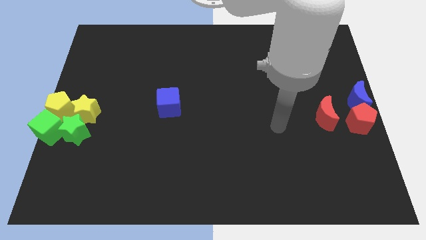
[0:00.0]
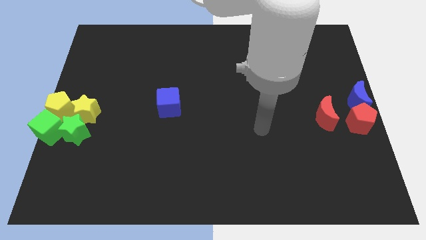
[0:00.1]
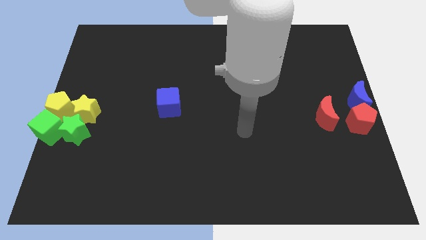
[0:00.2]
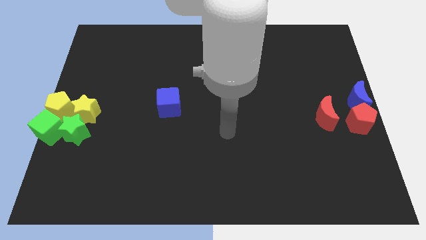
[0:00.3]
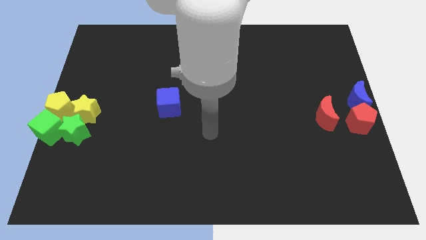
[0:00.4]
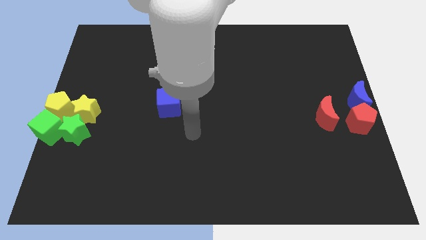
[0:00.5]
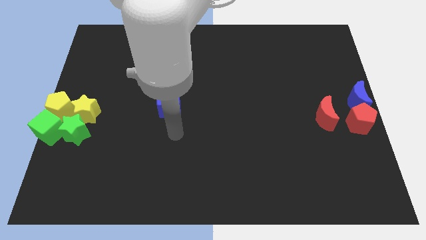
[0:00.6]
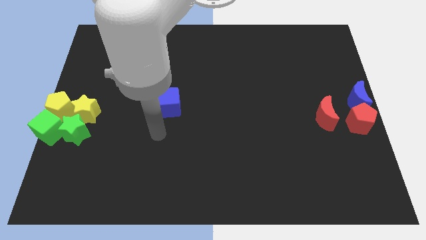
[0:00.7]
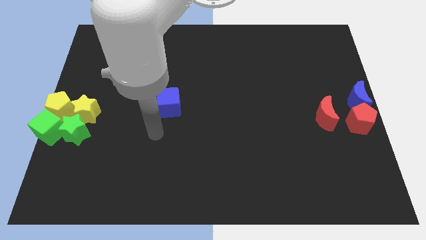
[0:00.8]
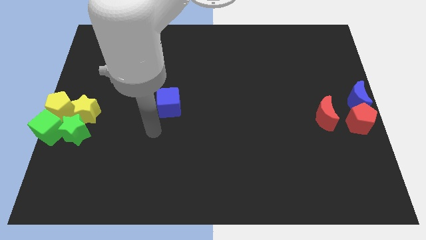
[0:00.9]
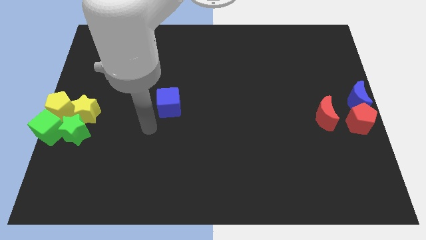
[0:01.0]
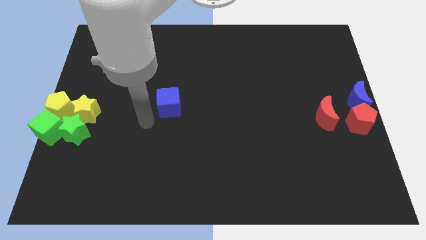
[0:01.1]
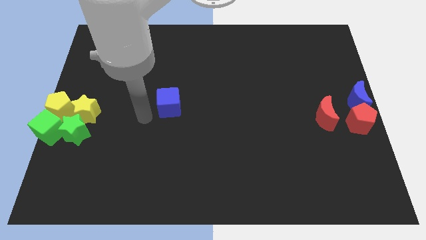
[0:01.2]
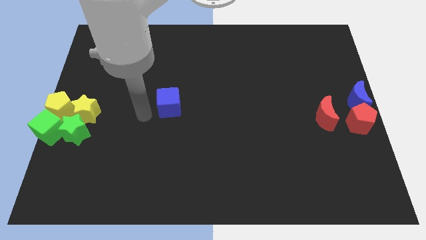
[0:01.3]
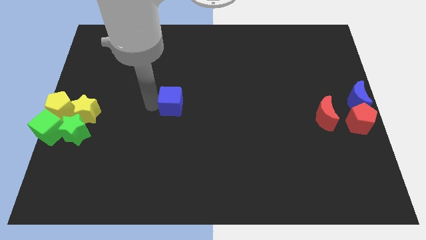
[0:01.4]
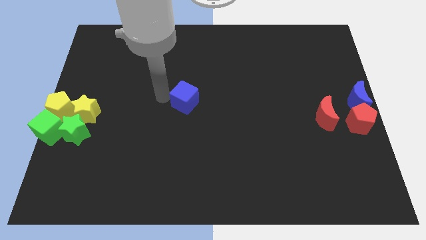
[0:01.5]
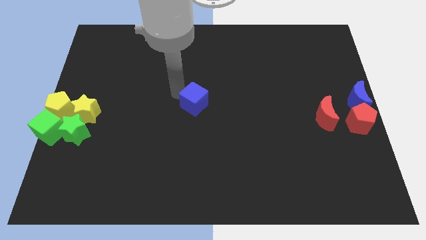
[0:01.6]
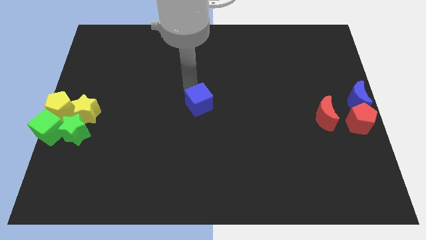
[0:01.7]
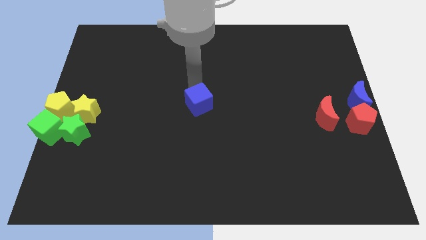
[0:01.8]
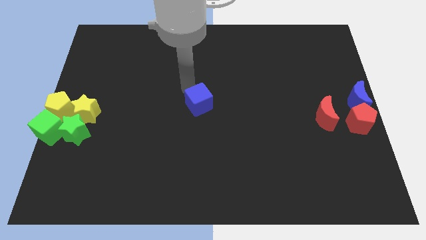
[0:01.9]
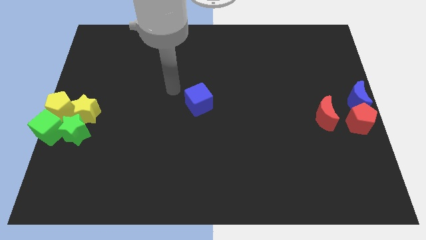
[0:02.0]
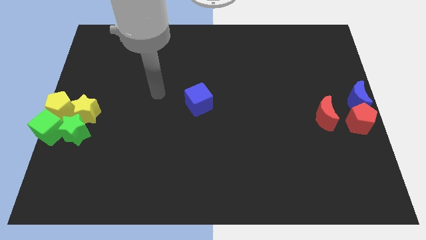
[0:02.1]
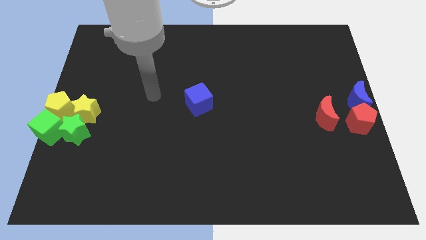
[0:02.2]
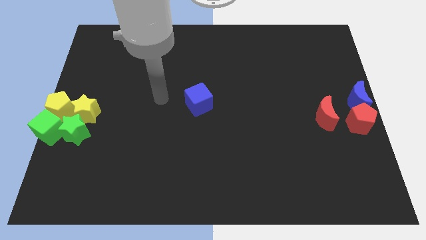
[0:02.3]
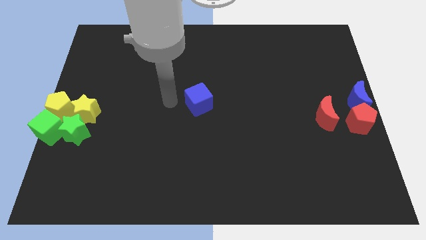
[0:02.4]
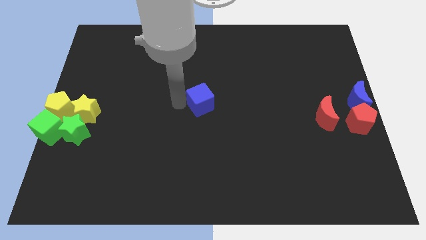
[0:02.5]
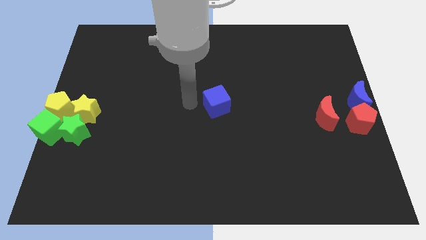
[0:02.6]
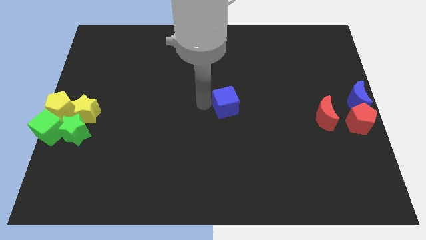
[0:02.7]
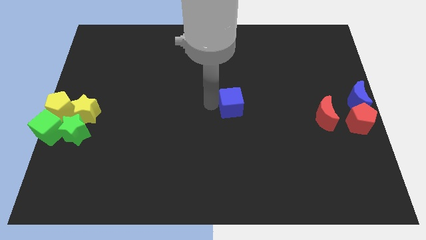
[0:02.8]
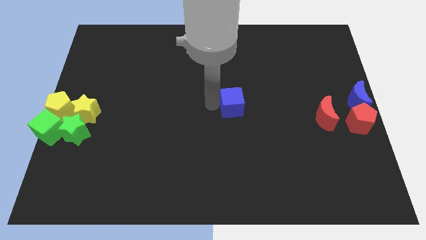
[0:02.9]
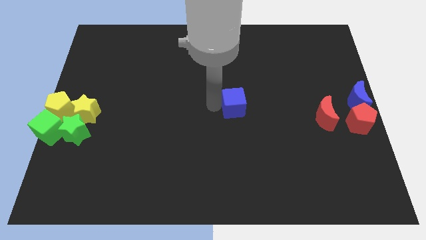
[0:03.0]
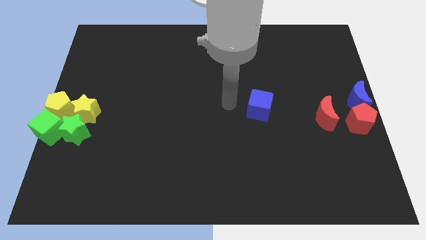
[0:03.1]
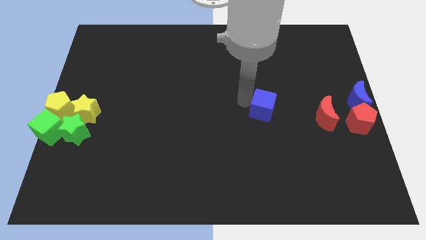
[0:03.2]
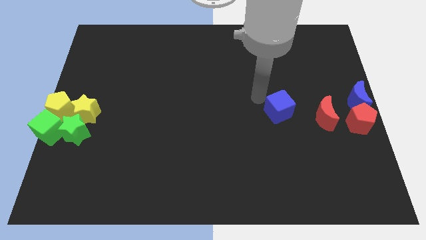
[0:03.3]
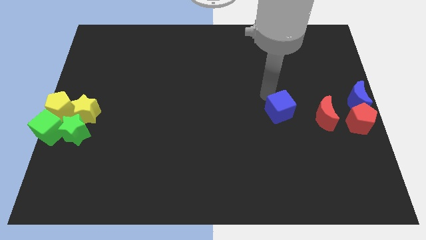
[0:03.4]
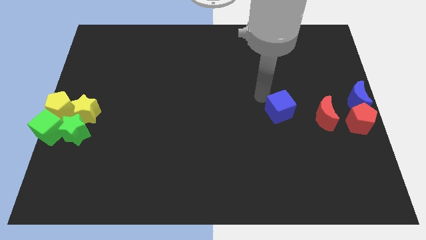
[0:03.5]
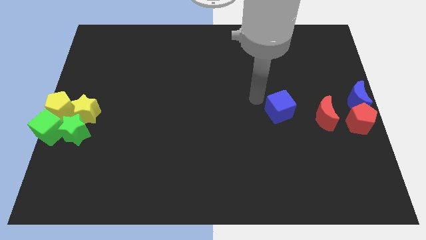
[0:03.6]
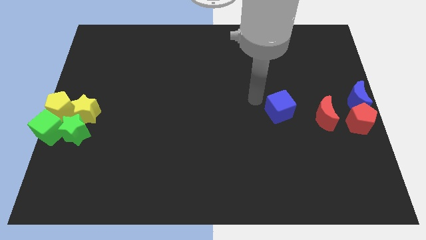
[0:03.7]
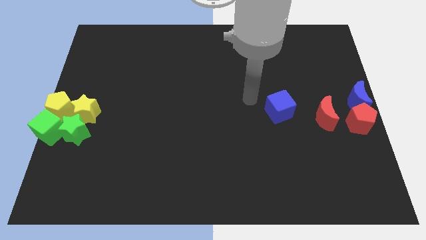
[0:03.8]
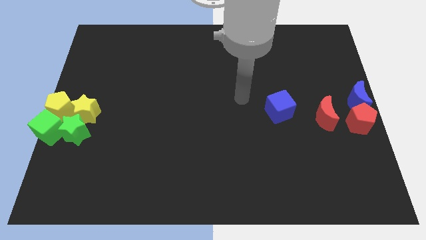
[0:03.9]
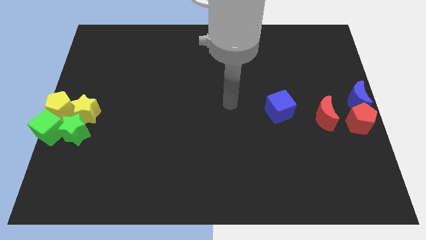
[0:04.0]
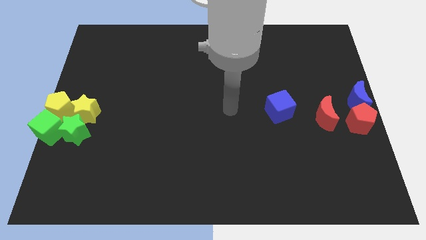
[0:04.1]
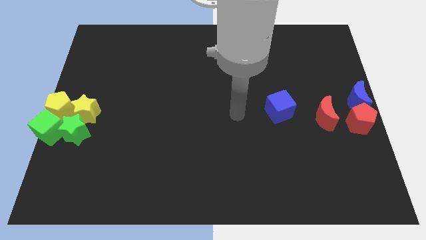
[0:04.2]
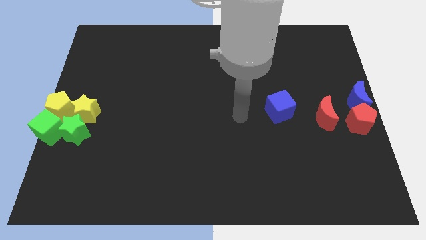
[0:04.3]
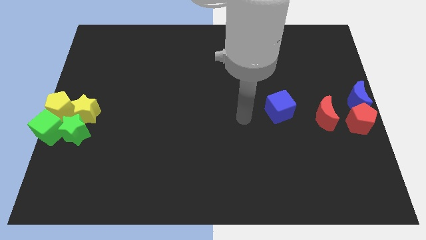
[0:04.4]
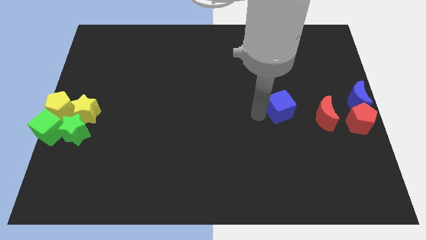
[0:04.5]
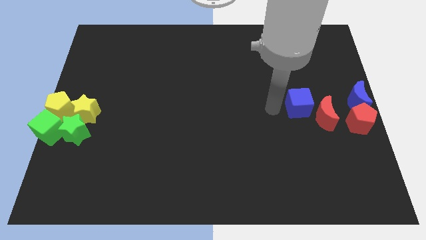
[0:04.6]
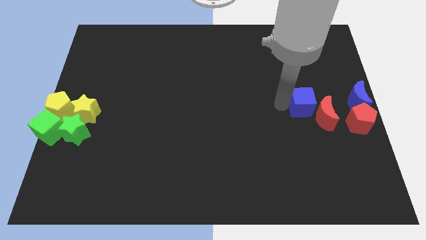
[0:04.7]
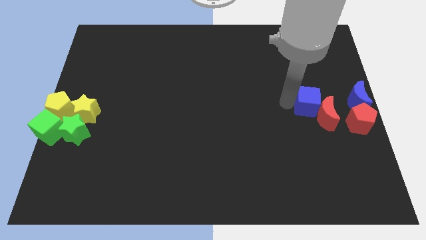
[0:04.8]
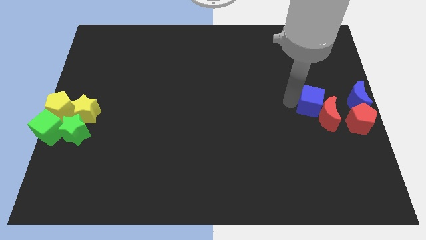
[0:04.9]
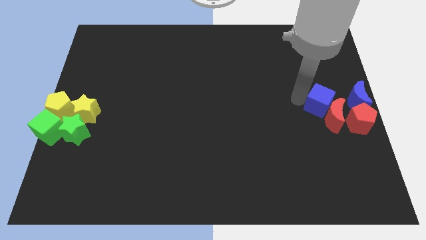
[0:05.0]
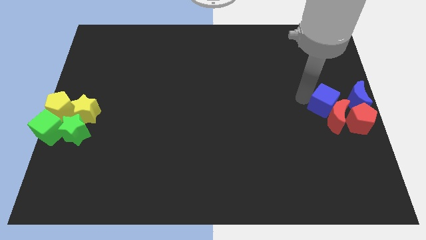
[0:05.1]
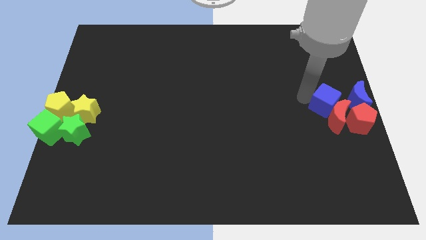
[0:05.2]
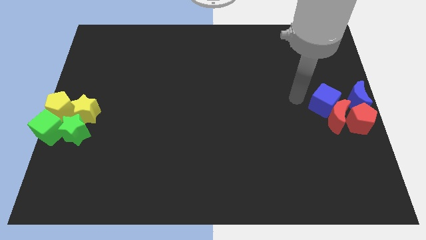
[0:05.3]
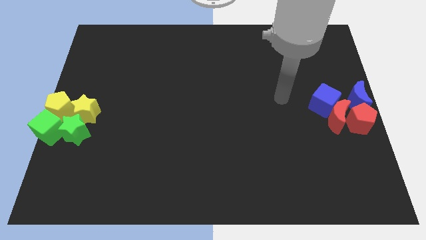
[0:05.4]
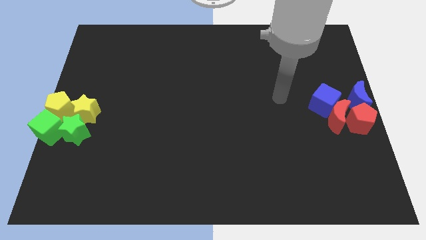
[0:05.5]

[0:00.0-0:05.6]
move the blue cube to the top left side of the red crescent

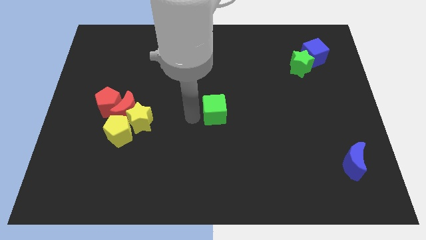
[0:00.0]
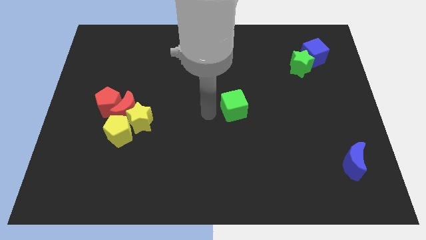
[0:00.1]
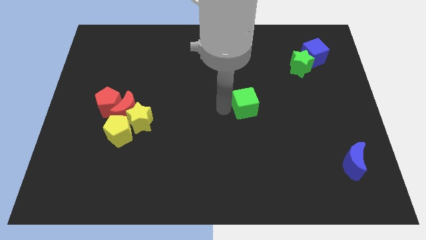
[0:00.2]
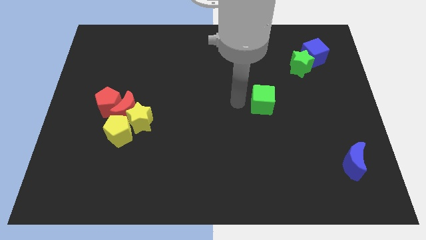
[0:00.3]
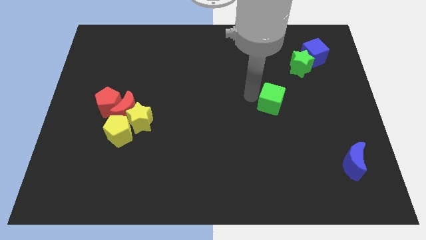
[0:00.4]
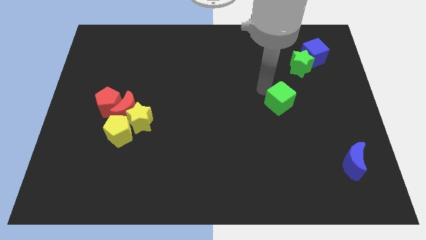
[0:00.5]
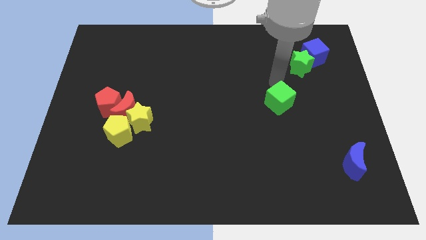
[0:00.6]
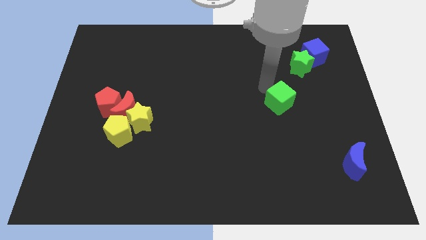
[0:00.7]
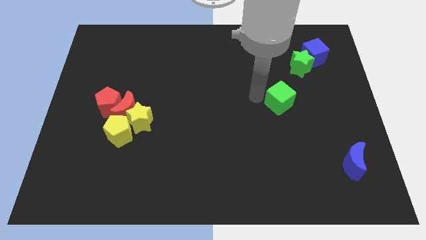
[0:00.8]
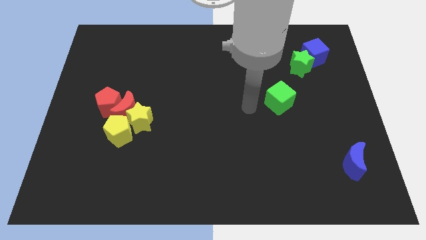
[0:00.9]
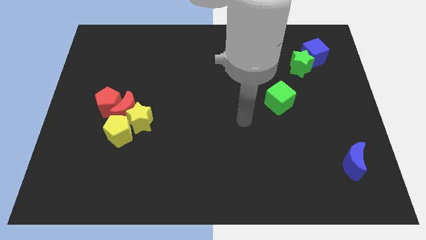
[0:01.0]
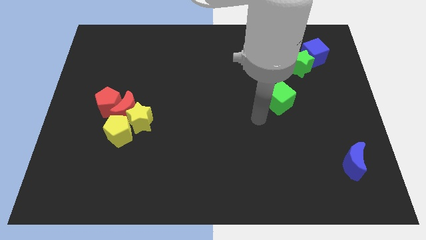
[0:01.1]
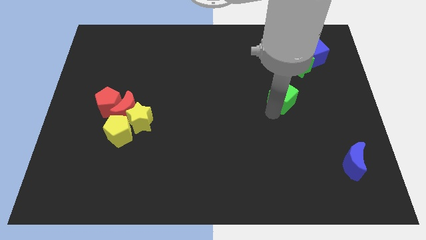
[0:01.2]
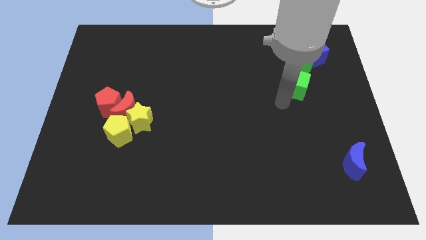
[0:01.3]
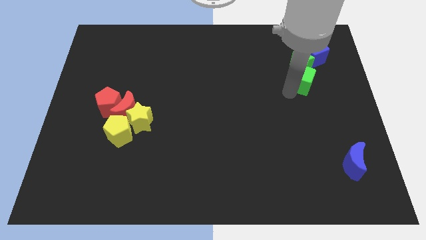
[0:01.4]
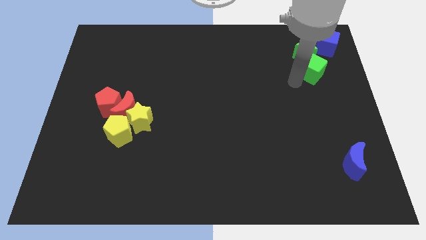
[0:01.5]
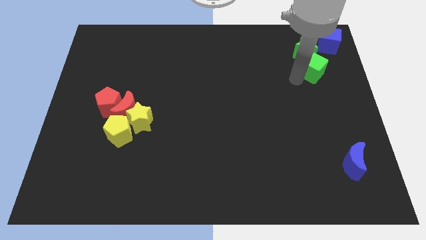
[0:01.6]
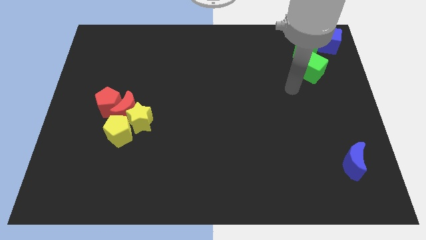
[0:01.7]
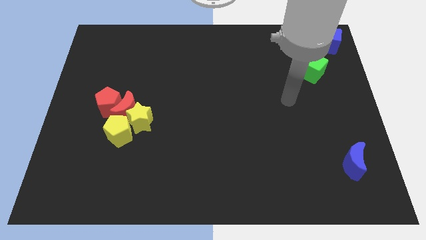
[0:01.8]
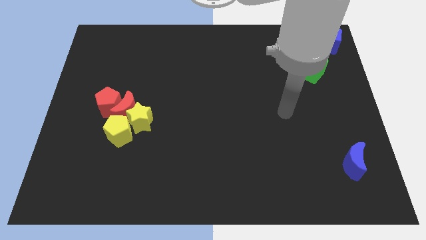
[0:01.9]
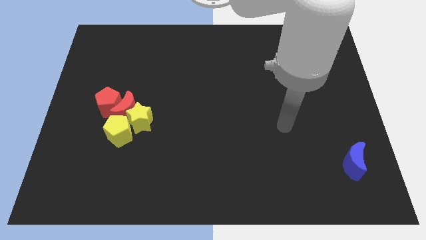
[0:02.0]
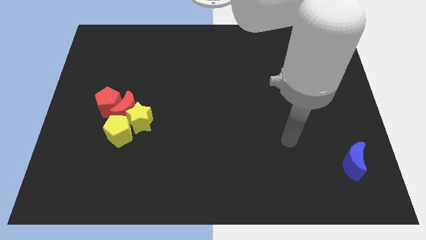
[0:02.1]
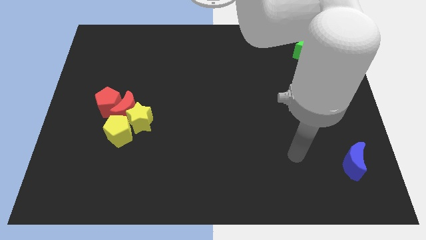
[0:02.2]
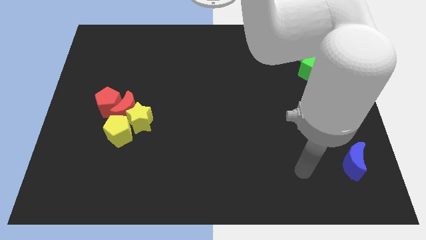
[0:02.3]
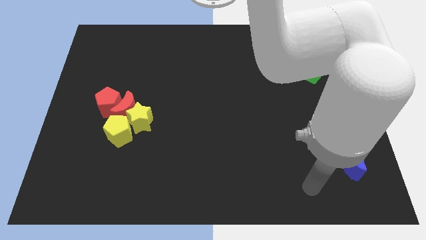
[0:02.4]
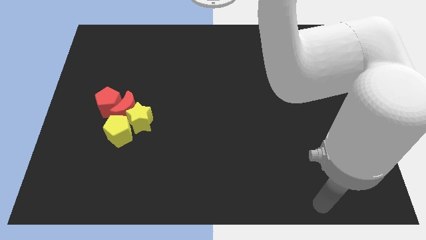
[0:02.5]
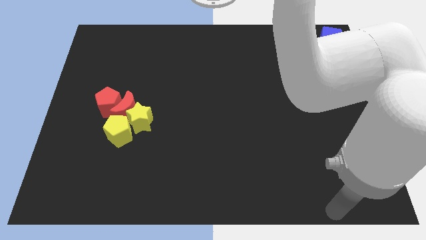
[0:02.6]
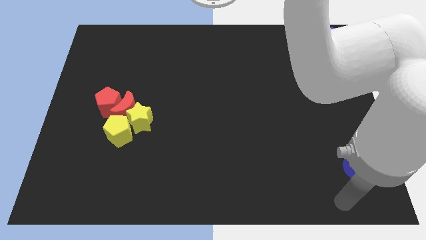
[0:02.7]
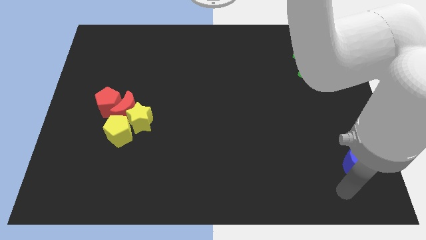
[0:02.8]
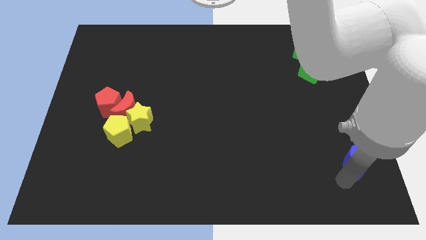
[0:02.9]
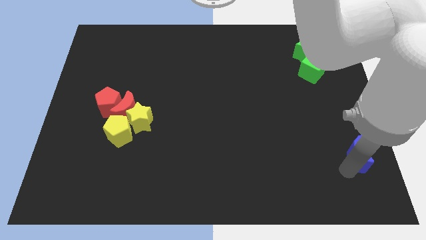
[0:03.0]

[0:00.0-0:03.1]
move the green cube to the bottom of the green star

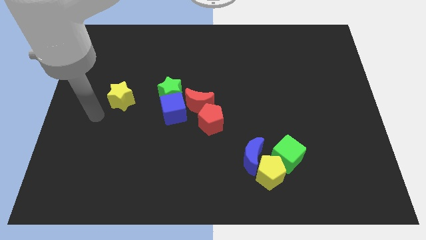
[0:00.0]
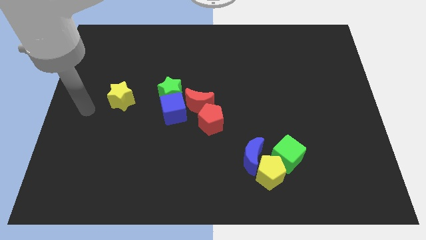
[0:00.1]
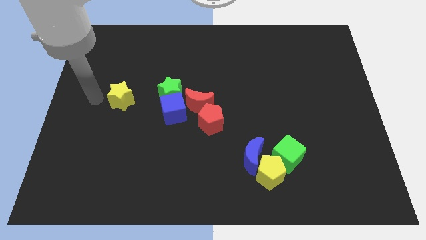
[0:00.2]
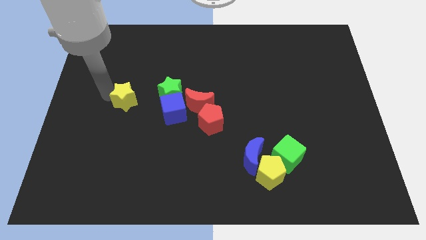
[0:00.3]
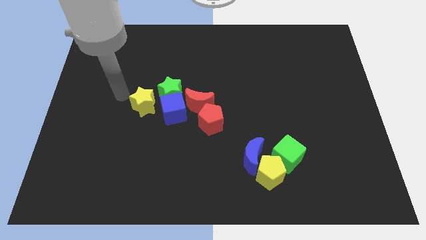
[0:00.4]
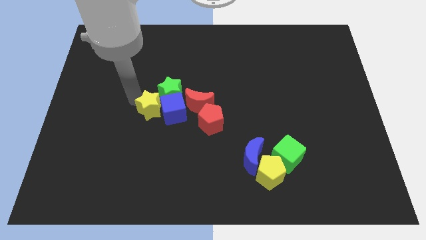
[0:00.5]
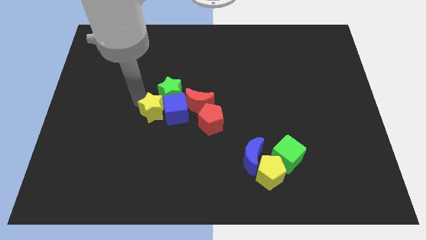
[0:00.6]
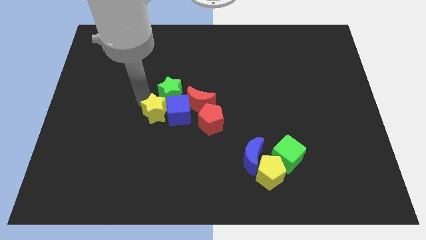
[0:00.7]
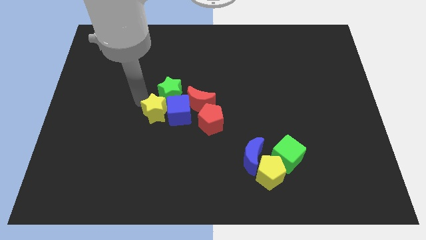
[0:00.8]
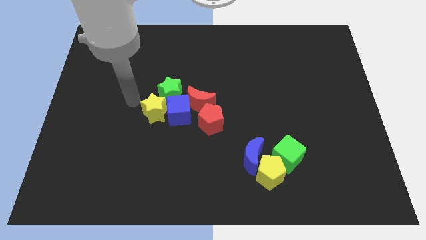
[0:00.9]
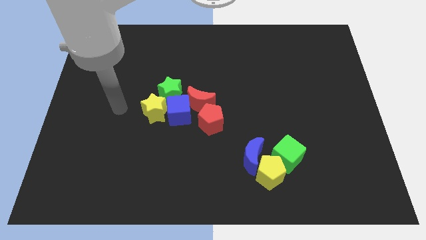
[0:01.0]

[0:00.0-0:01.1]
push the yellow star into the blue cube
